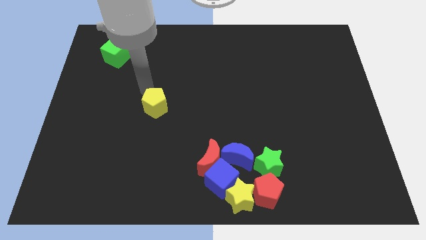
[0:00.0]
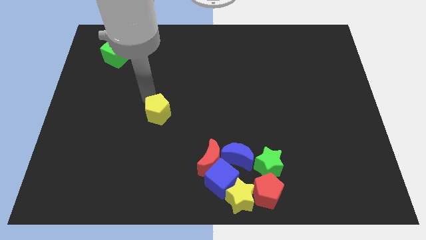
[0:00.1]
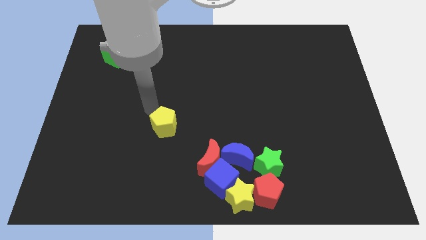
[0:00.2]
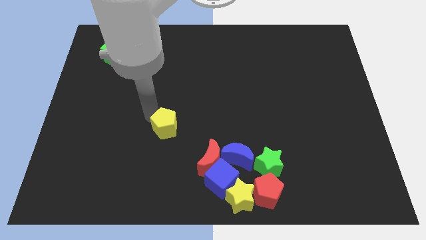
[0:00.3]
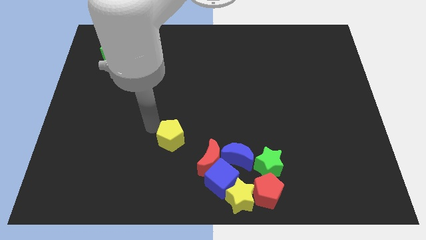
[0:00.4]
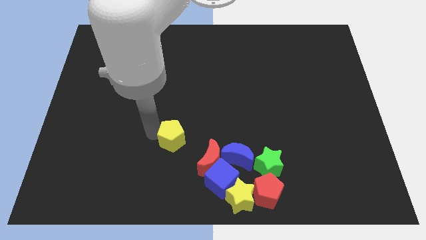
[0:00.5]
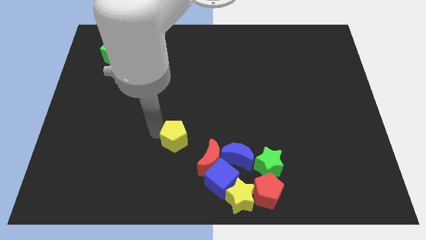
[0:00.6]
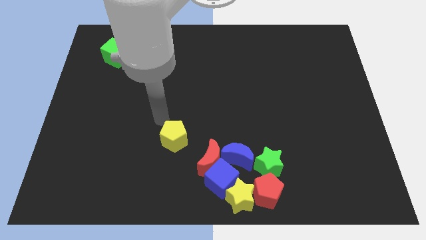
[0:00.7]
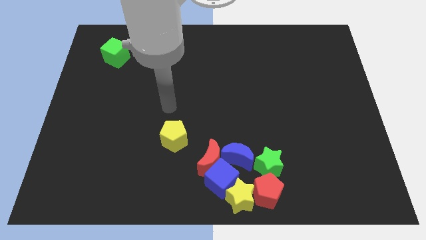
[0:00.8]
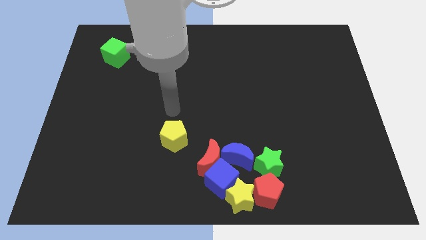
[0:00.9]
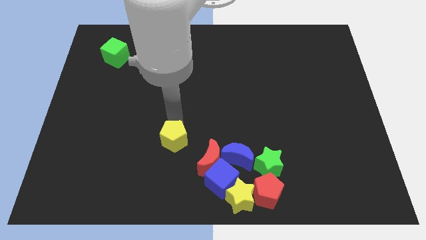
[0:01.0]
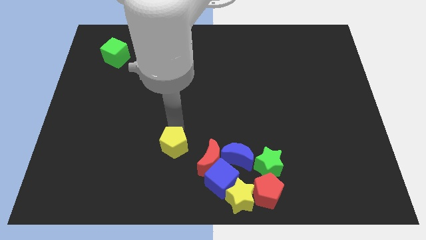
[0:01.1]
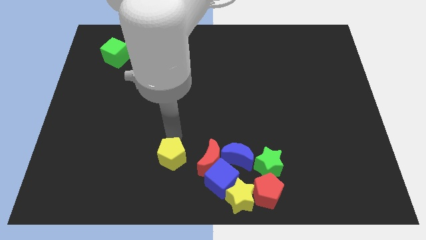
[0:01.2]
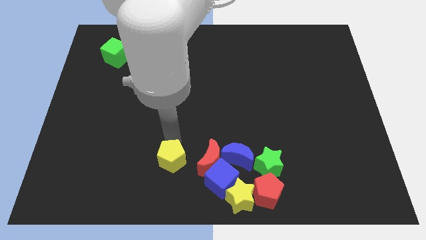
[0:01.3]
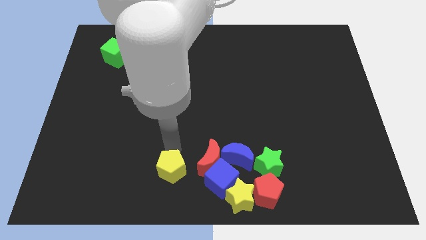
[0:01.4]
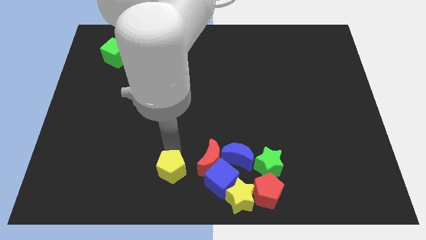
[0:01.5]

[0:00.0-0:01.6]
push the yellow pentagon to the left of the red crescent

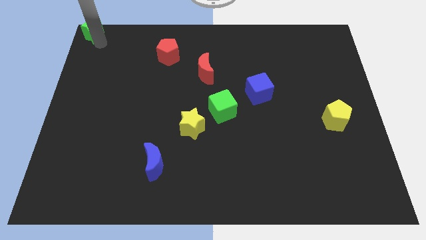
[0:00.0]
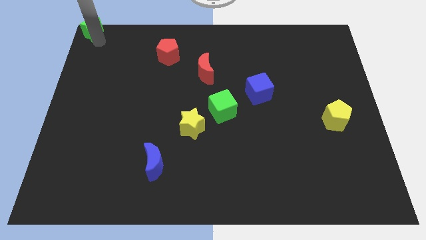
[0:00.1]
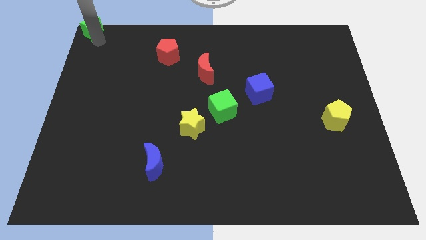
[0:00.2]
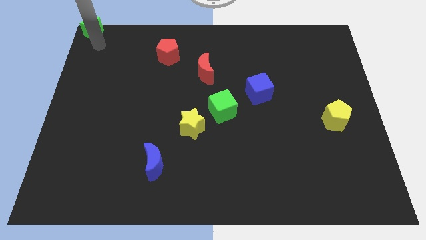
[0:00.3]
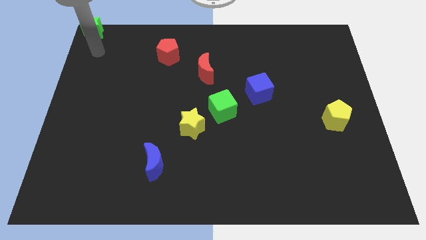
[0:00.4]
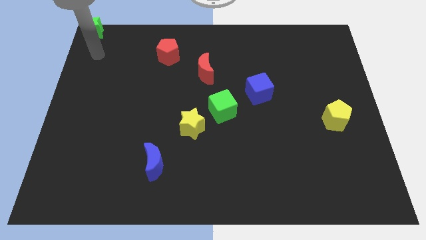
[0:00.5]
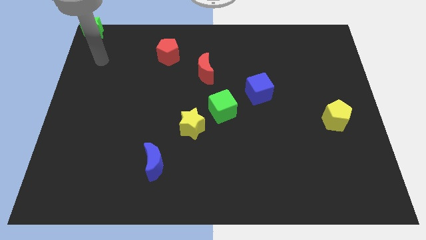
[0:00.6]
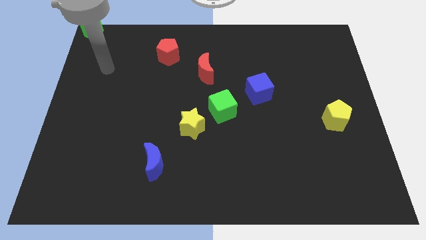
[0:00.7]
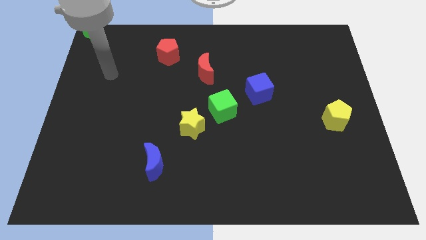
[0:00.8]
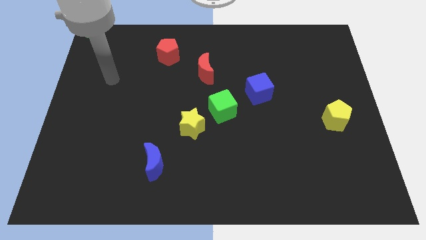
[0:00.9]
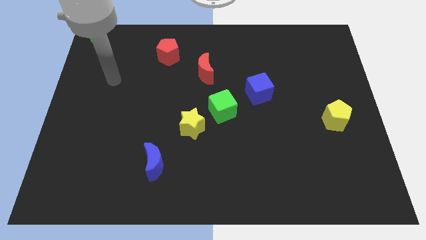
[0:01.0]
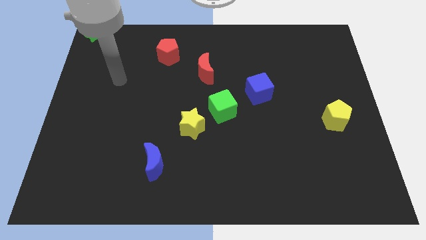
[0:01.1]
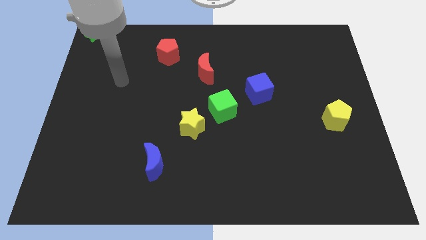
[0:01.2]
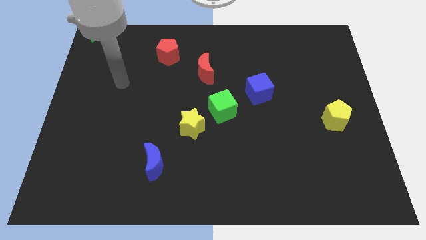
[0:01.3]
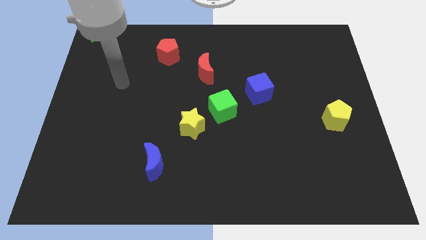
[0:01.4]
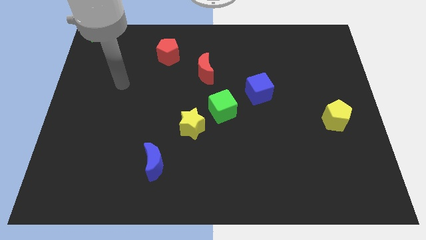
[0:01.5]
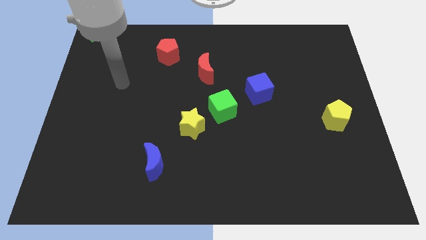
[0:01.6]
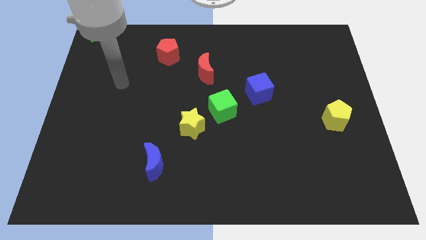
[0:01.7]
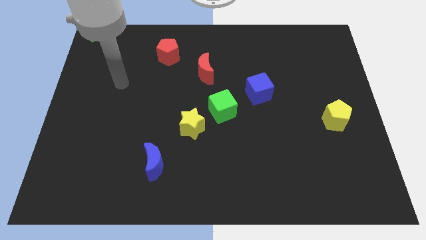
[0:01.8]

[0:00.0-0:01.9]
move your arm away from green star

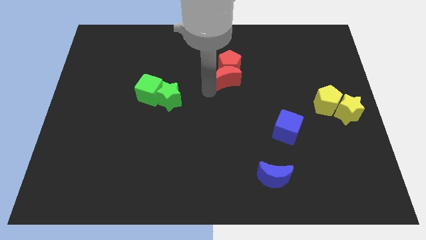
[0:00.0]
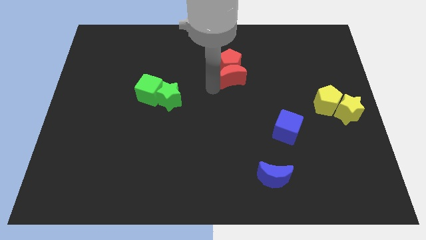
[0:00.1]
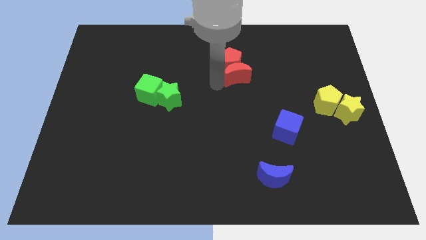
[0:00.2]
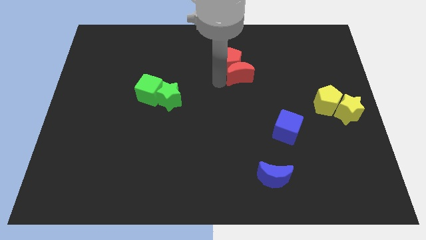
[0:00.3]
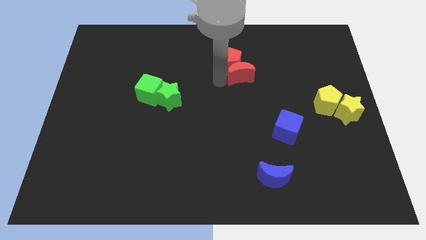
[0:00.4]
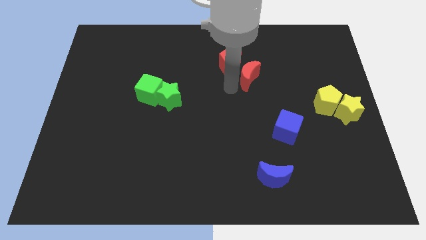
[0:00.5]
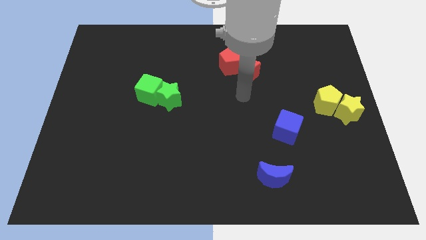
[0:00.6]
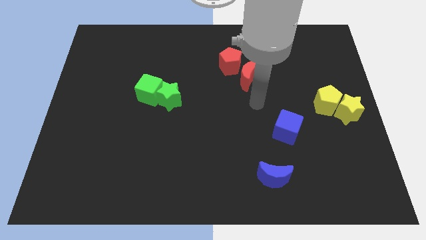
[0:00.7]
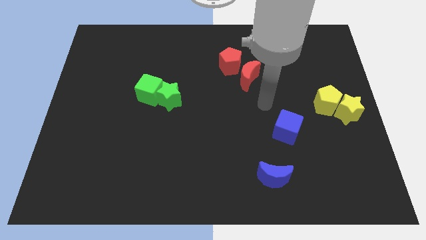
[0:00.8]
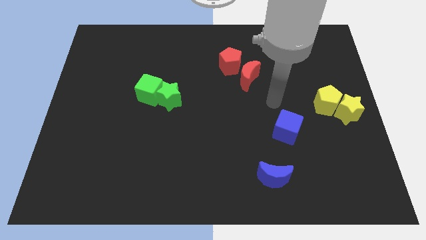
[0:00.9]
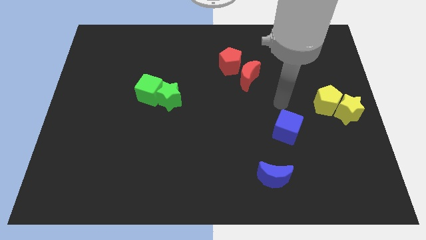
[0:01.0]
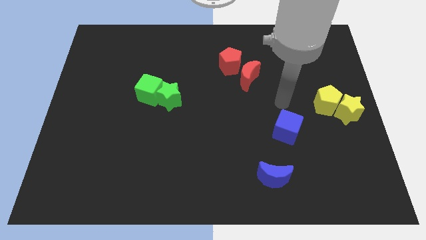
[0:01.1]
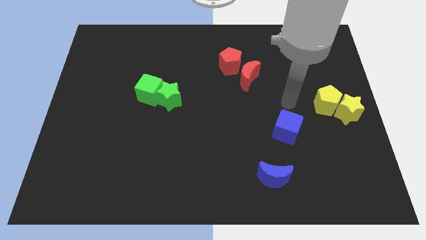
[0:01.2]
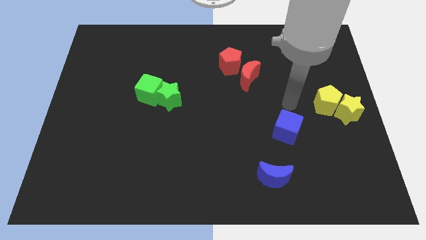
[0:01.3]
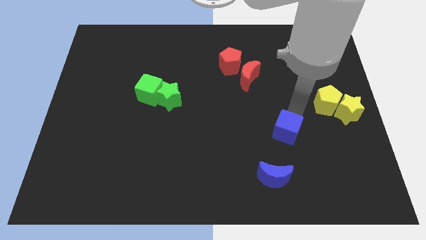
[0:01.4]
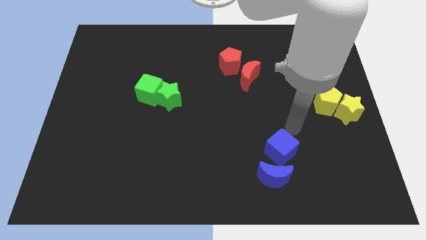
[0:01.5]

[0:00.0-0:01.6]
move your arm away from the red crescent

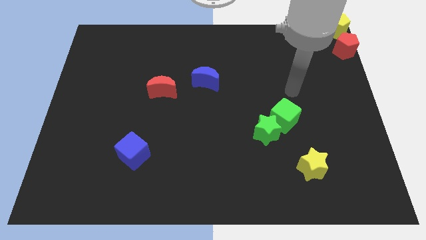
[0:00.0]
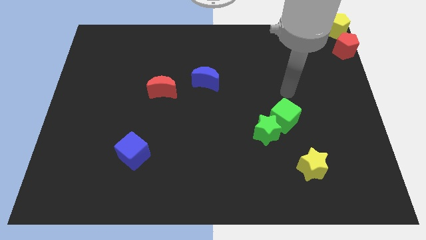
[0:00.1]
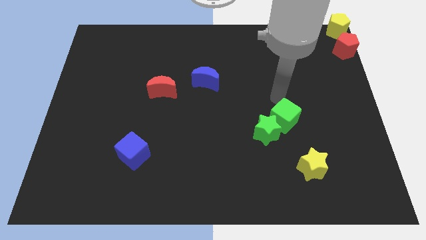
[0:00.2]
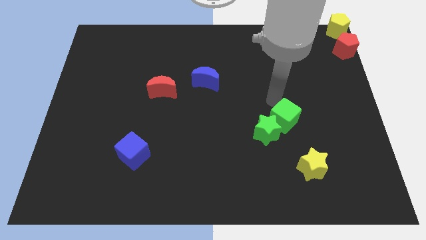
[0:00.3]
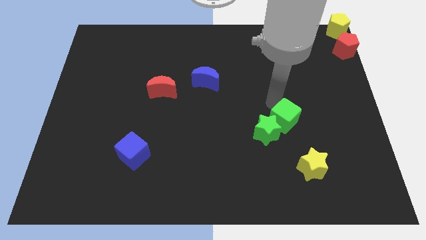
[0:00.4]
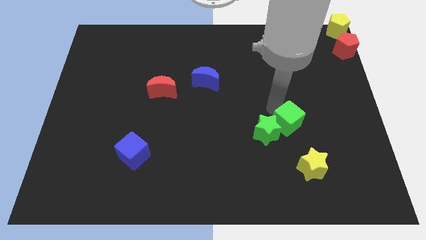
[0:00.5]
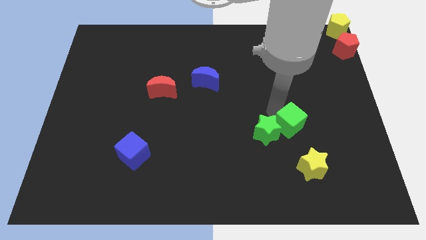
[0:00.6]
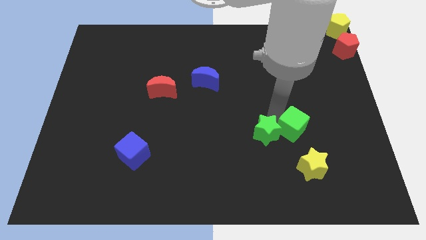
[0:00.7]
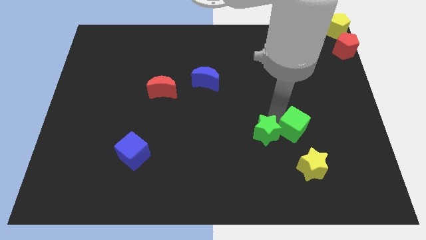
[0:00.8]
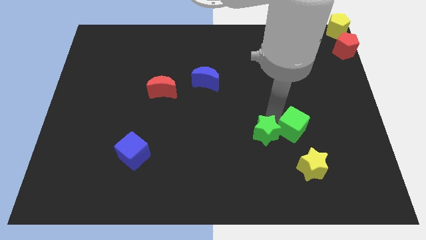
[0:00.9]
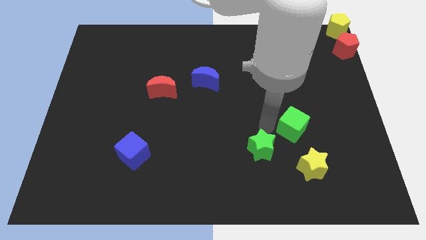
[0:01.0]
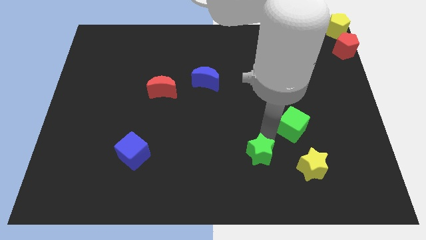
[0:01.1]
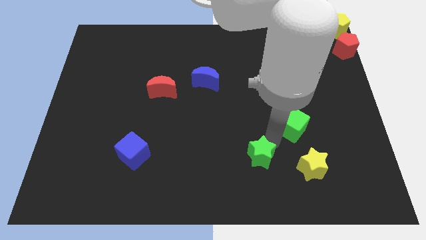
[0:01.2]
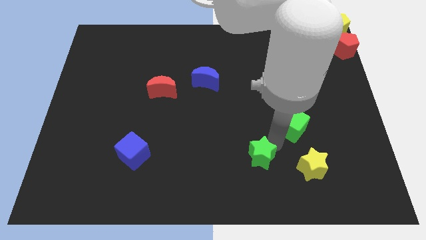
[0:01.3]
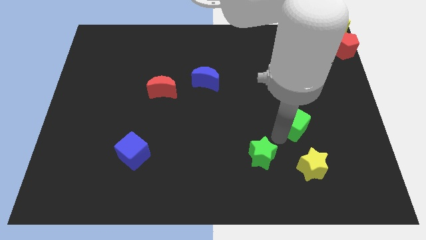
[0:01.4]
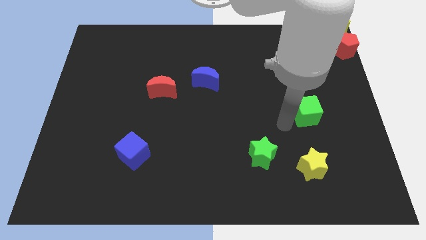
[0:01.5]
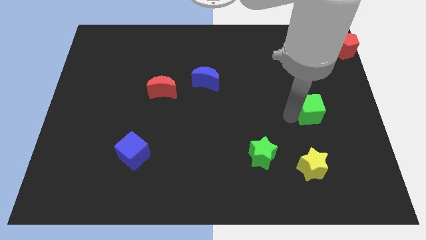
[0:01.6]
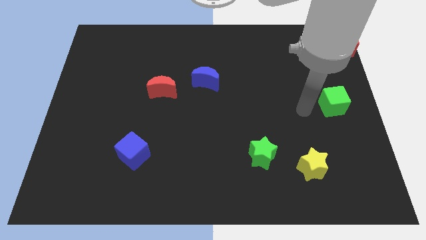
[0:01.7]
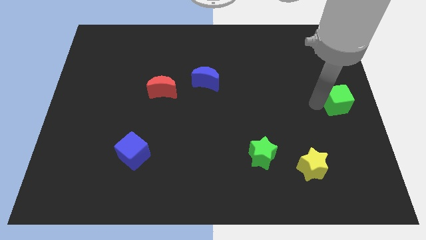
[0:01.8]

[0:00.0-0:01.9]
separate green cube from green star

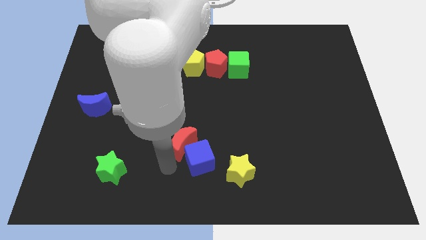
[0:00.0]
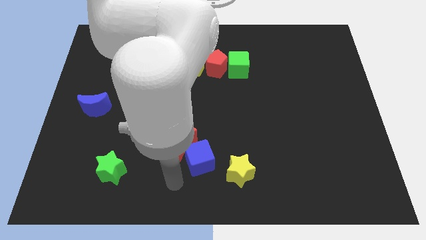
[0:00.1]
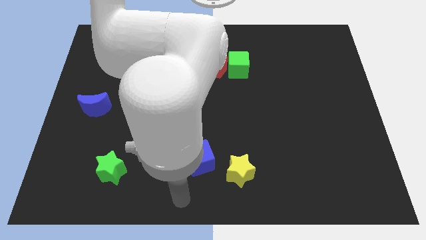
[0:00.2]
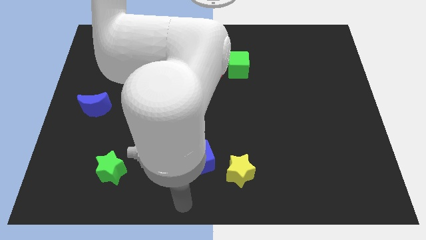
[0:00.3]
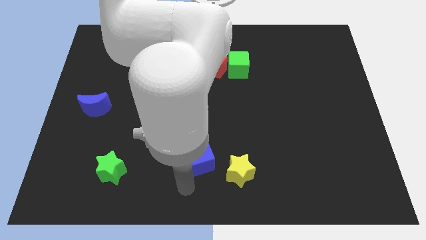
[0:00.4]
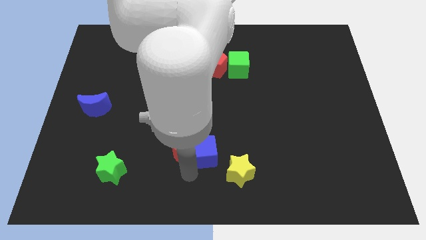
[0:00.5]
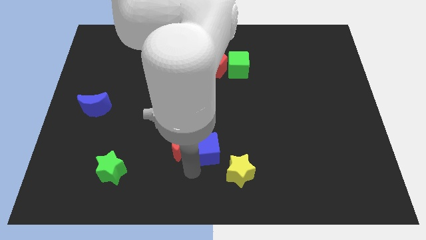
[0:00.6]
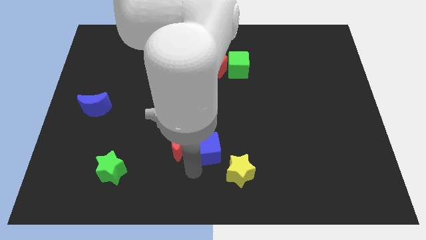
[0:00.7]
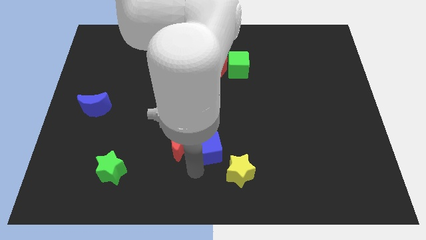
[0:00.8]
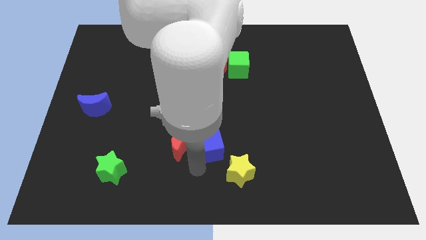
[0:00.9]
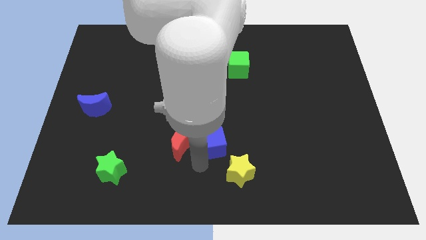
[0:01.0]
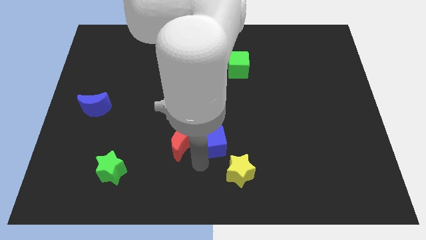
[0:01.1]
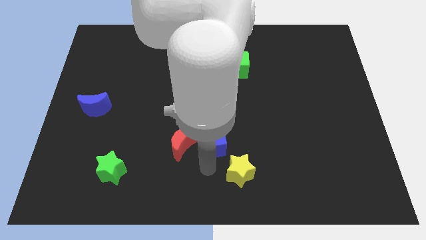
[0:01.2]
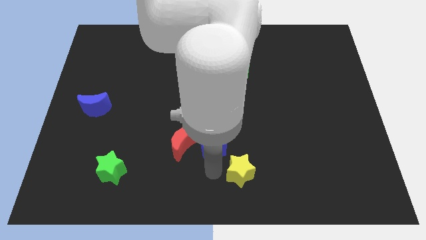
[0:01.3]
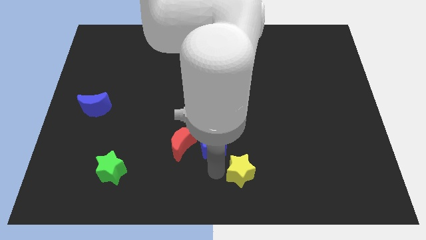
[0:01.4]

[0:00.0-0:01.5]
move the blue cube to the right side of the red moon

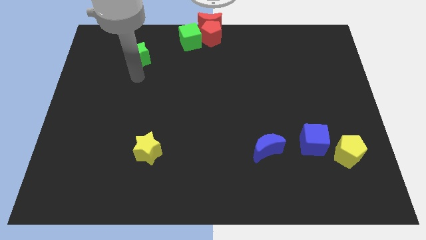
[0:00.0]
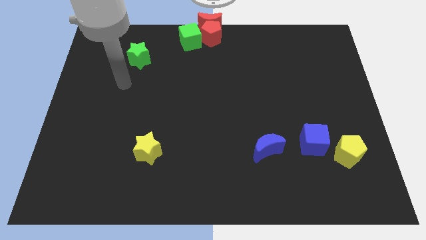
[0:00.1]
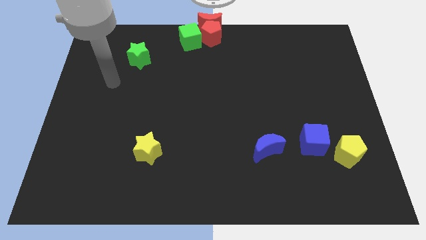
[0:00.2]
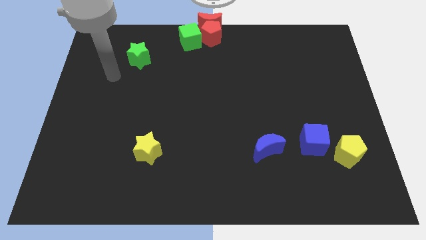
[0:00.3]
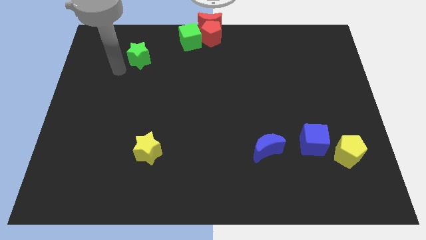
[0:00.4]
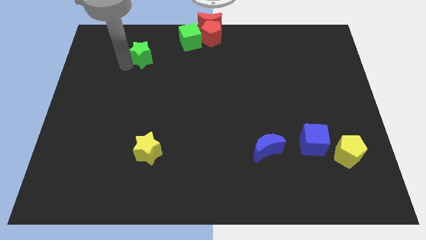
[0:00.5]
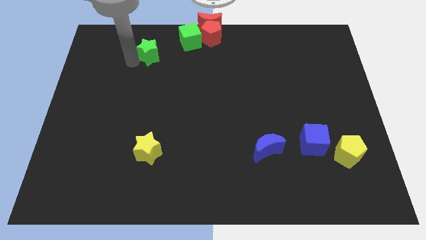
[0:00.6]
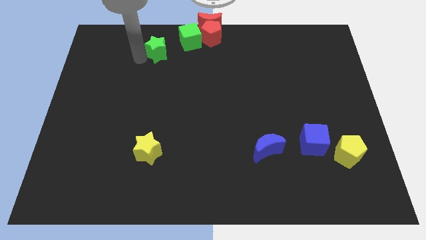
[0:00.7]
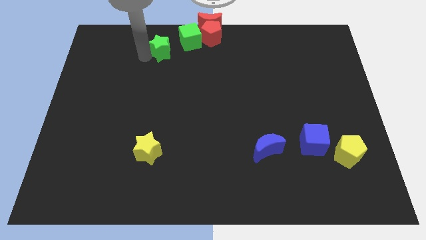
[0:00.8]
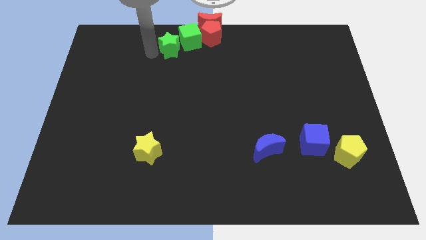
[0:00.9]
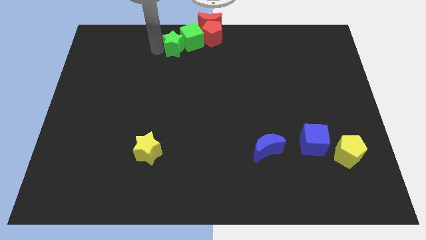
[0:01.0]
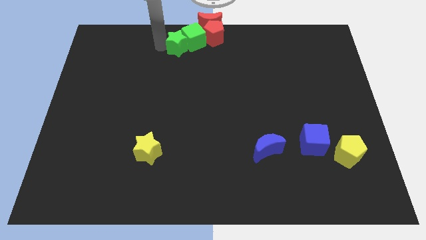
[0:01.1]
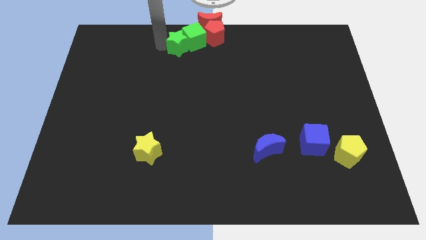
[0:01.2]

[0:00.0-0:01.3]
push green star in to green cube
